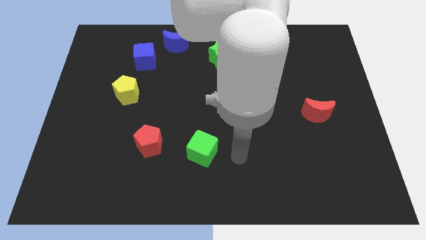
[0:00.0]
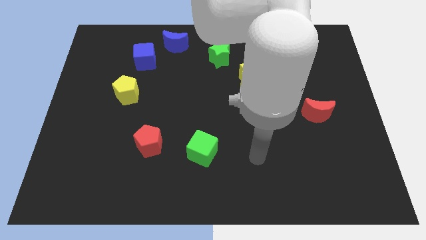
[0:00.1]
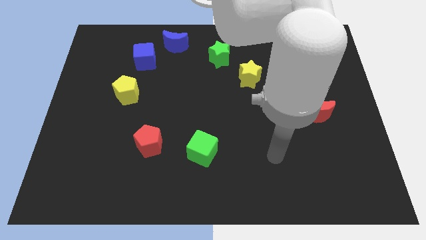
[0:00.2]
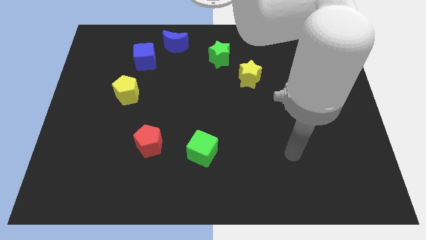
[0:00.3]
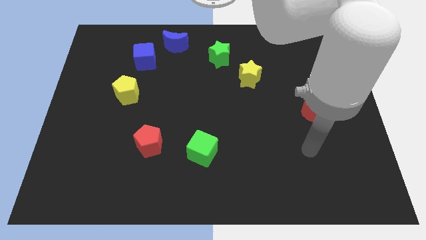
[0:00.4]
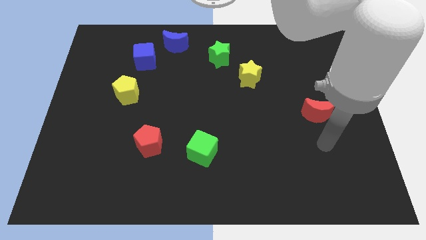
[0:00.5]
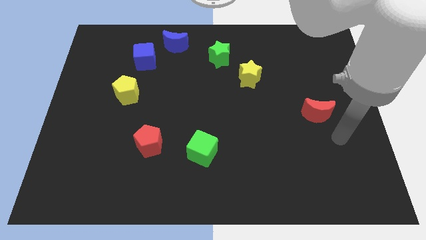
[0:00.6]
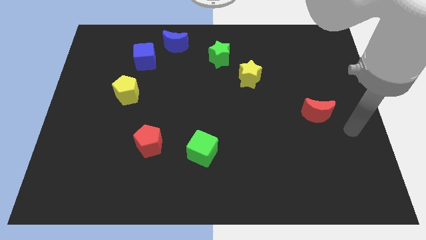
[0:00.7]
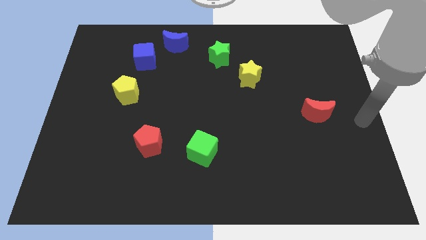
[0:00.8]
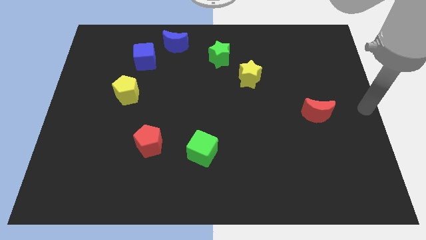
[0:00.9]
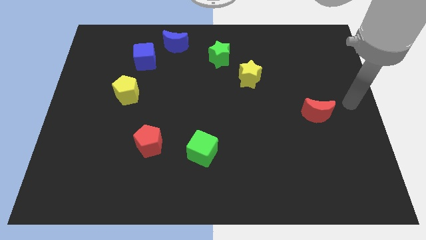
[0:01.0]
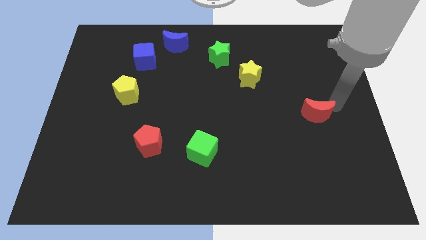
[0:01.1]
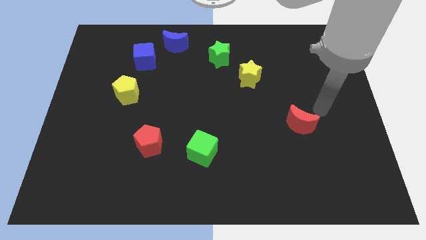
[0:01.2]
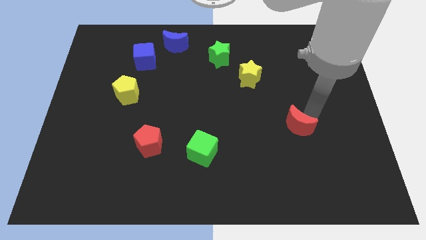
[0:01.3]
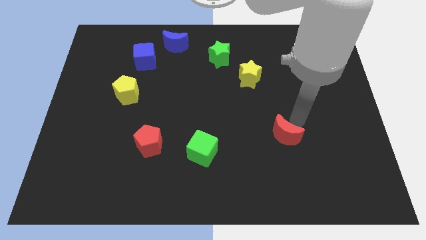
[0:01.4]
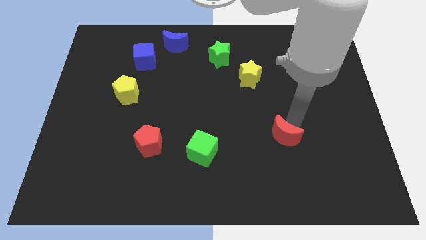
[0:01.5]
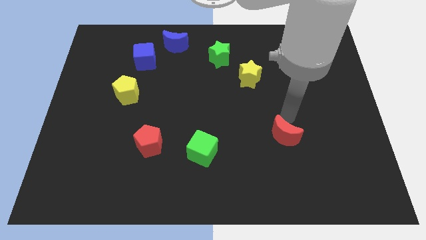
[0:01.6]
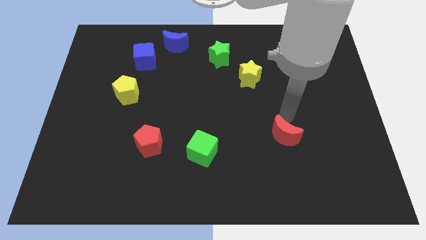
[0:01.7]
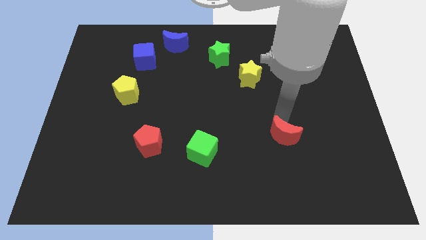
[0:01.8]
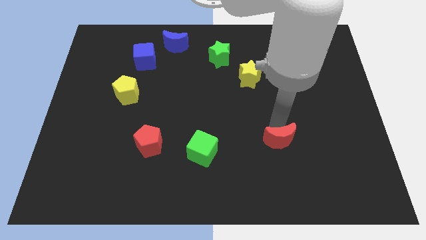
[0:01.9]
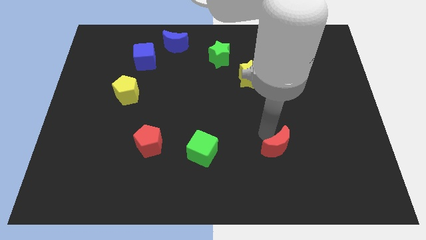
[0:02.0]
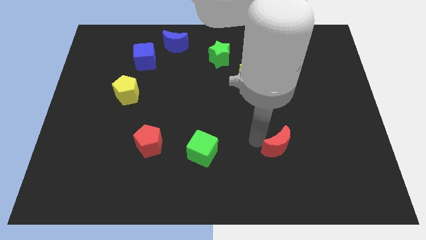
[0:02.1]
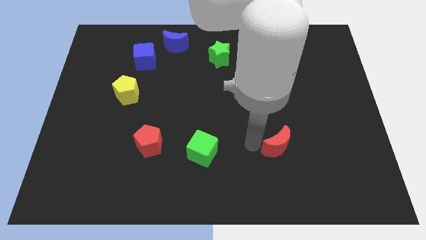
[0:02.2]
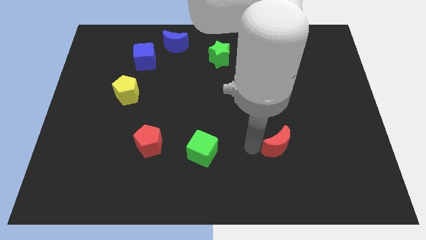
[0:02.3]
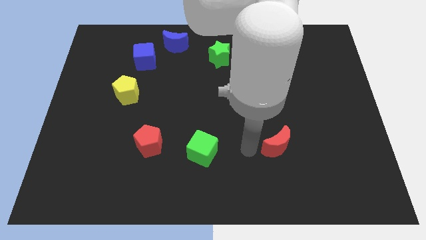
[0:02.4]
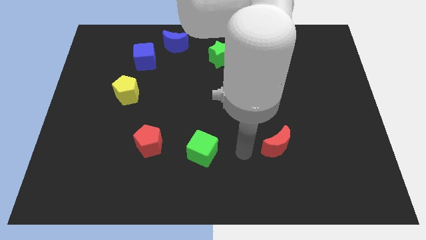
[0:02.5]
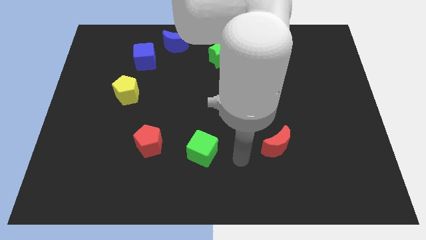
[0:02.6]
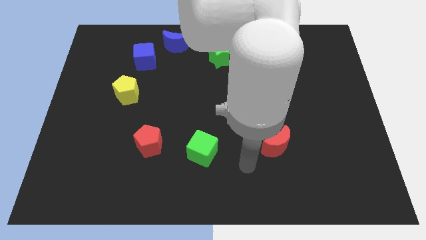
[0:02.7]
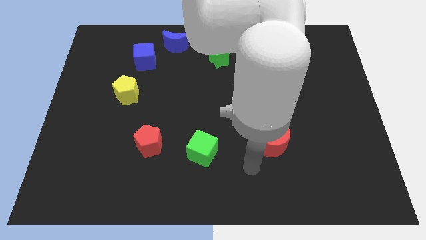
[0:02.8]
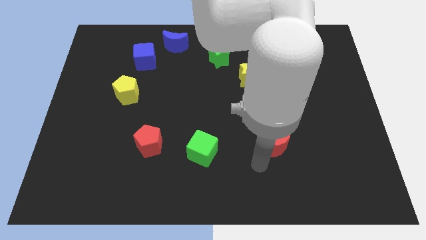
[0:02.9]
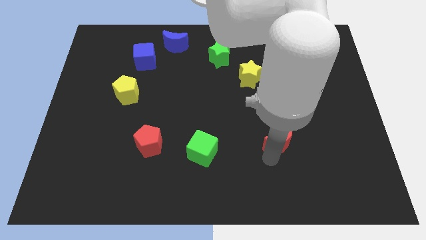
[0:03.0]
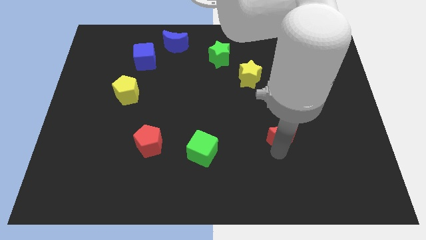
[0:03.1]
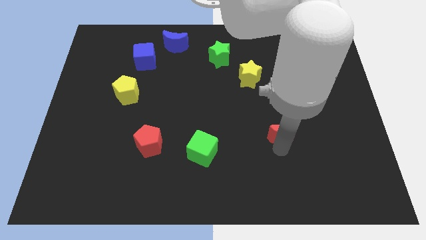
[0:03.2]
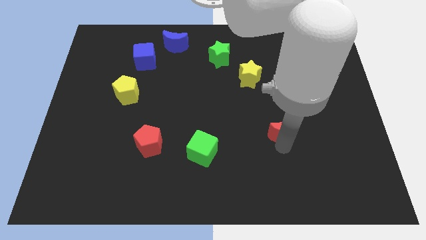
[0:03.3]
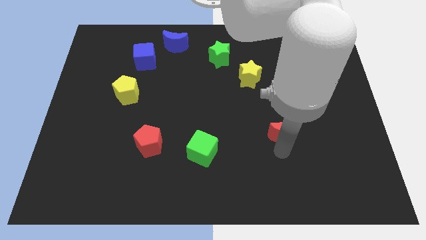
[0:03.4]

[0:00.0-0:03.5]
move the red crescent towards left

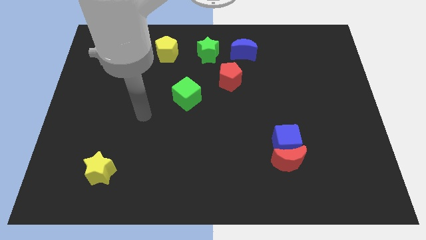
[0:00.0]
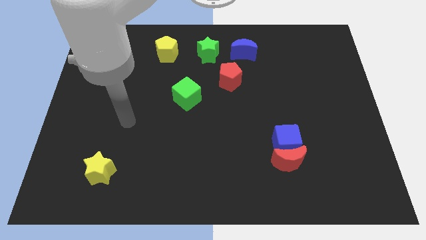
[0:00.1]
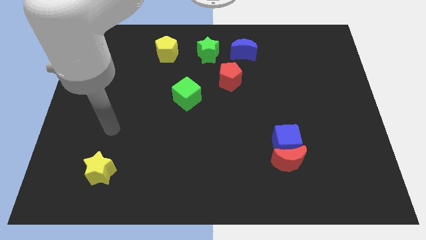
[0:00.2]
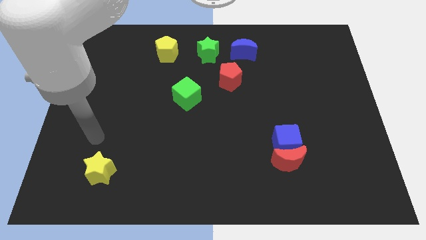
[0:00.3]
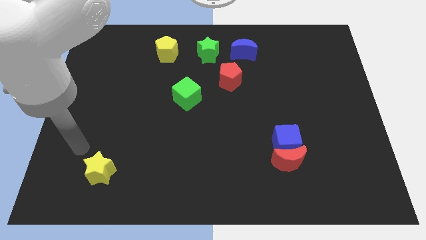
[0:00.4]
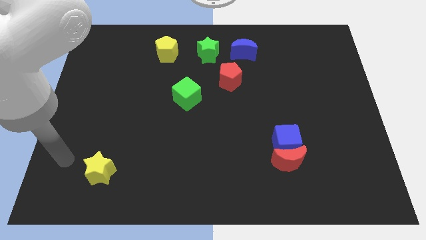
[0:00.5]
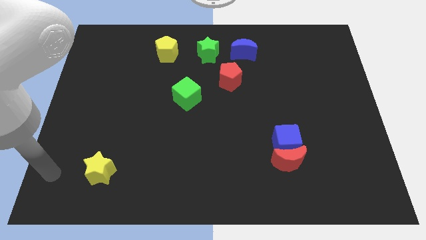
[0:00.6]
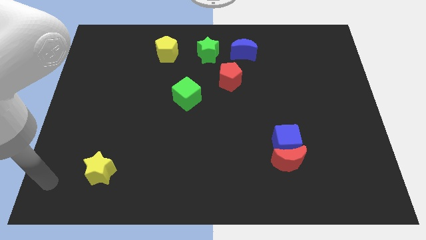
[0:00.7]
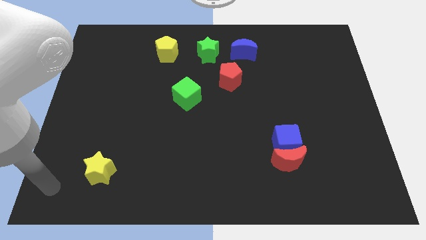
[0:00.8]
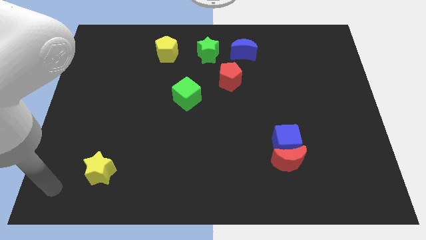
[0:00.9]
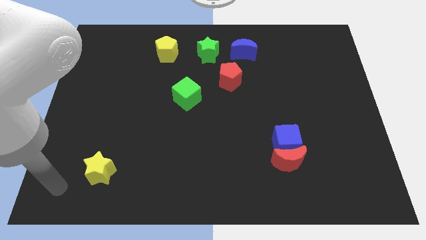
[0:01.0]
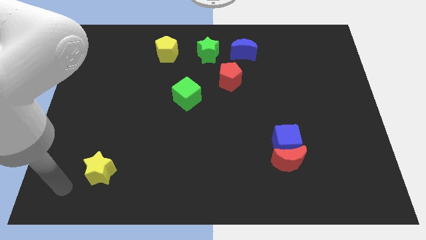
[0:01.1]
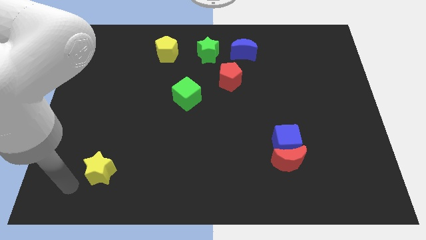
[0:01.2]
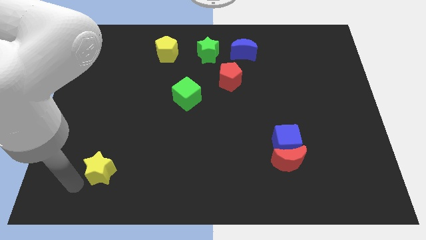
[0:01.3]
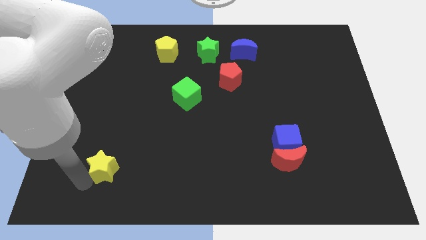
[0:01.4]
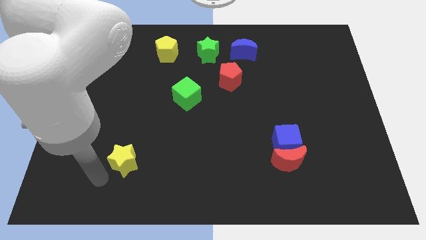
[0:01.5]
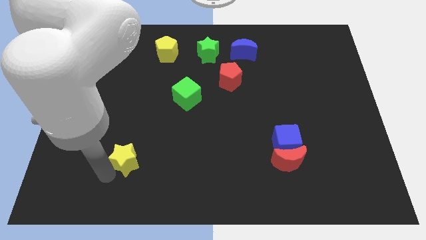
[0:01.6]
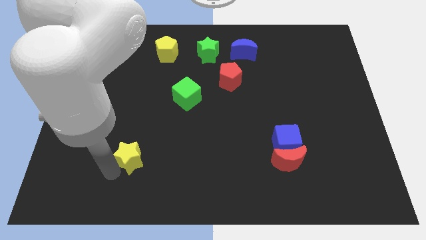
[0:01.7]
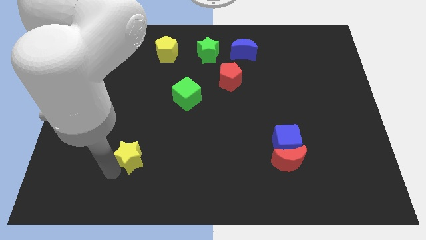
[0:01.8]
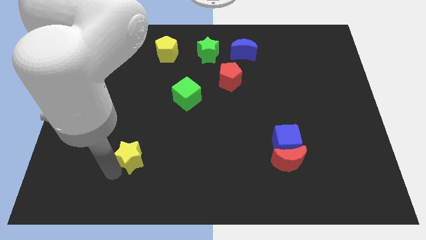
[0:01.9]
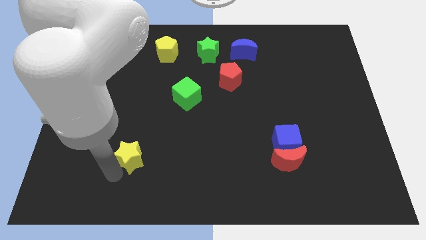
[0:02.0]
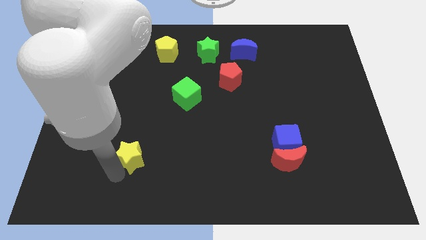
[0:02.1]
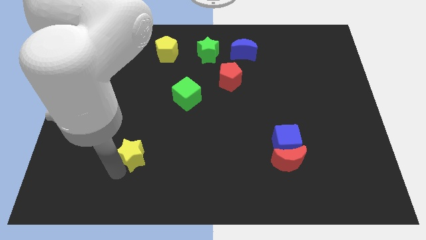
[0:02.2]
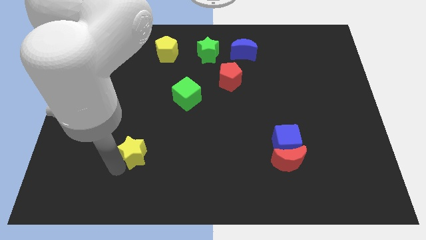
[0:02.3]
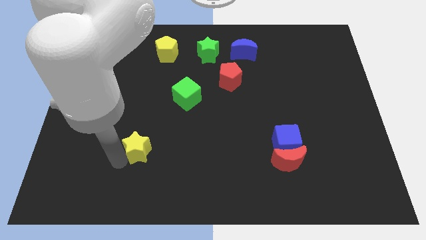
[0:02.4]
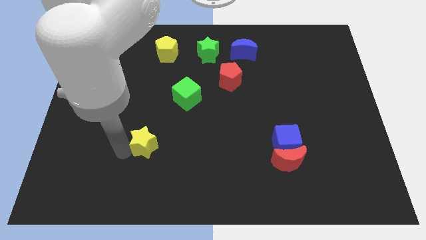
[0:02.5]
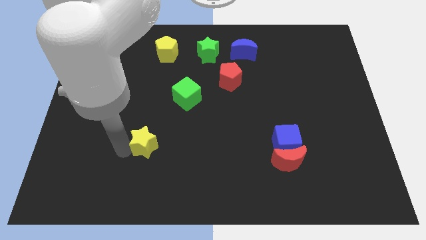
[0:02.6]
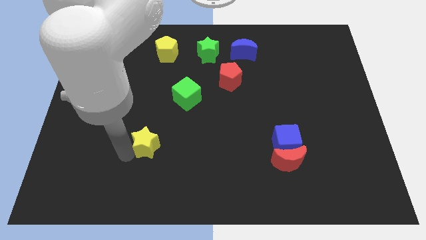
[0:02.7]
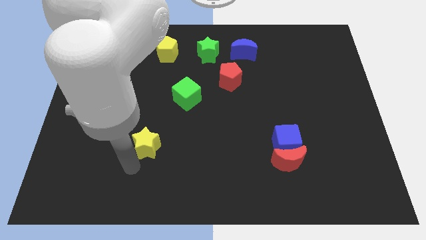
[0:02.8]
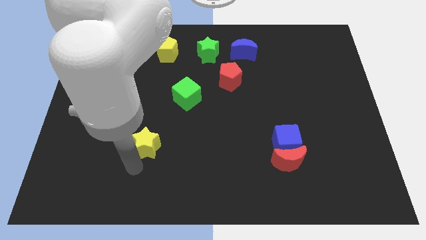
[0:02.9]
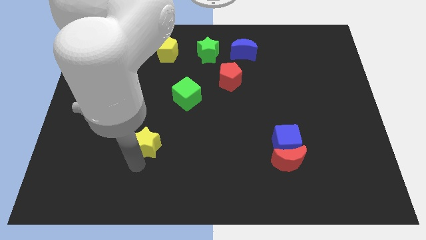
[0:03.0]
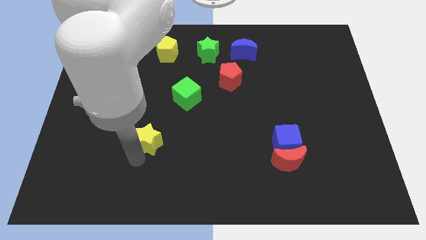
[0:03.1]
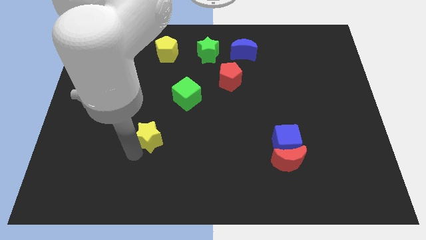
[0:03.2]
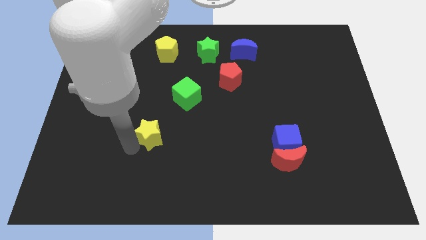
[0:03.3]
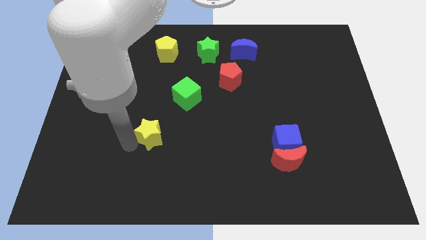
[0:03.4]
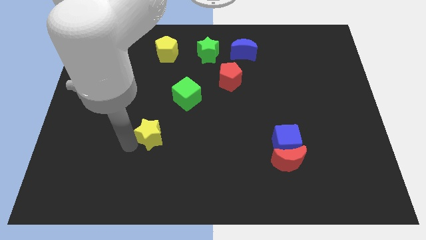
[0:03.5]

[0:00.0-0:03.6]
move the yellow star towards green cube

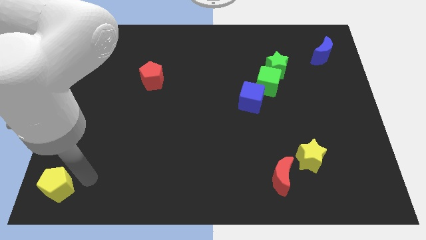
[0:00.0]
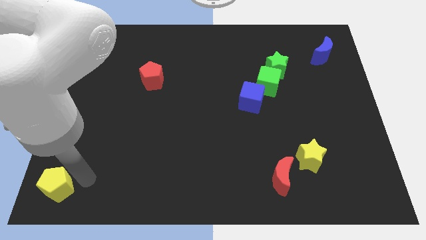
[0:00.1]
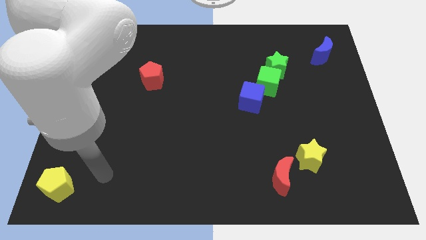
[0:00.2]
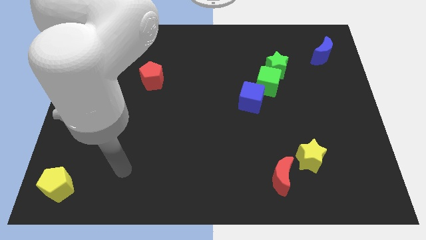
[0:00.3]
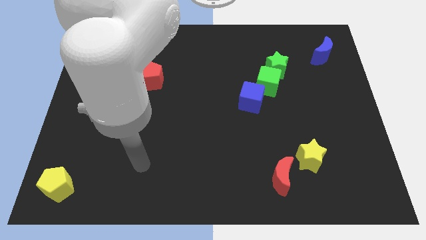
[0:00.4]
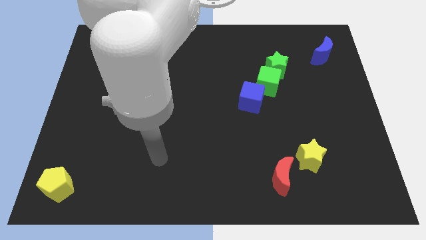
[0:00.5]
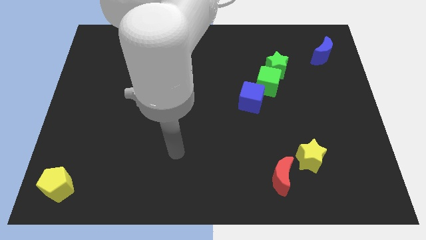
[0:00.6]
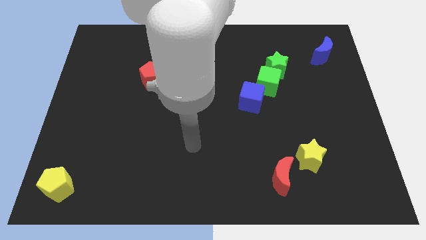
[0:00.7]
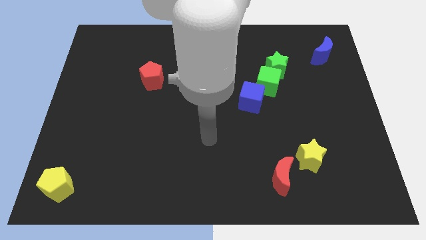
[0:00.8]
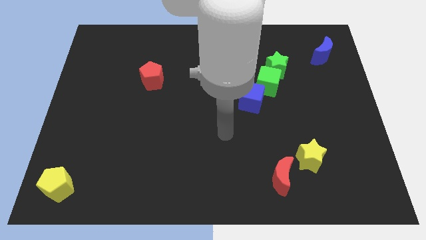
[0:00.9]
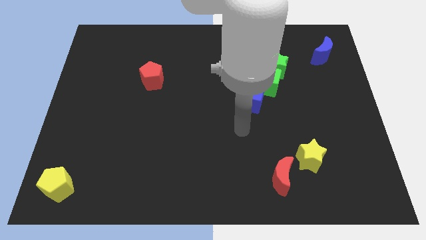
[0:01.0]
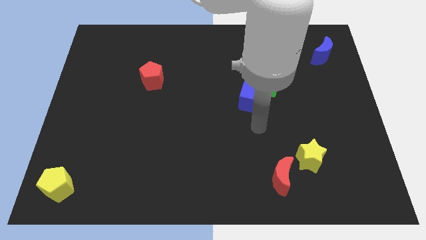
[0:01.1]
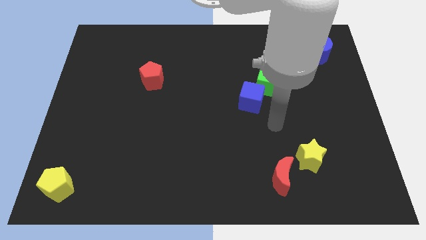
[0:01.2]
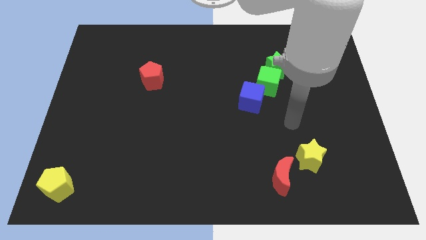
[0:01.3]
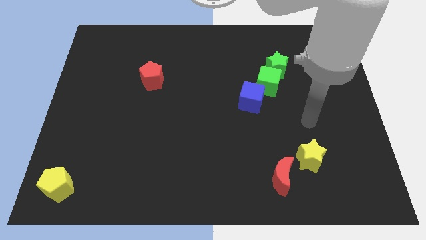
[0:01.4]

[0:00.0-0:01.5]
go to the top side of the yellow star

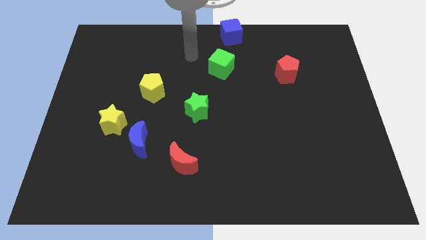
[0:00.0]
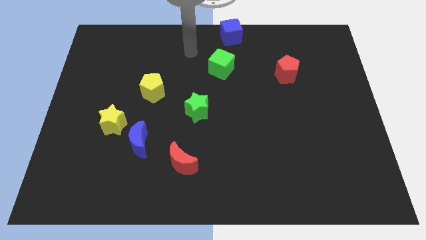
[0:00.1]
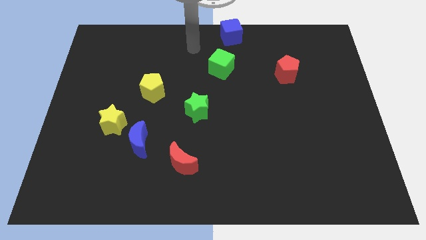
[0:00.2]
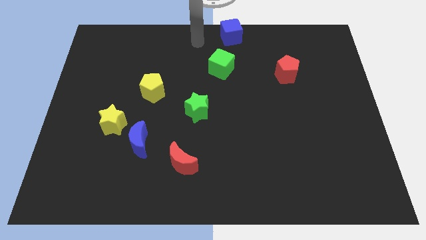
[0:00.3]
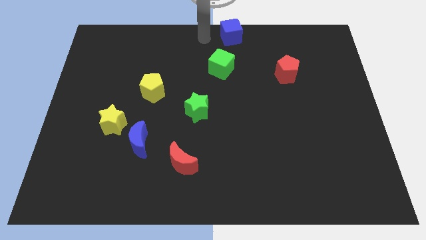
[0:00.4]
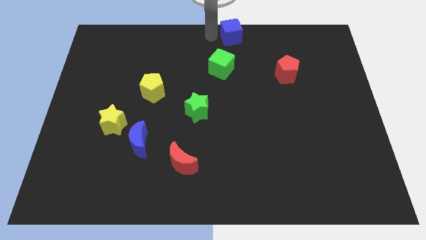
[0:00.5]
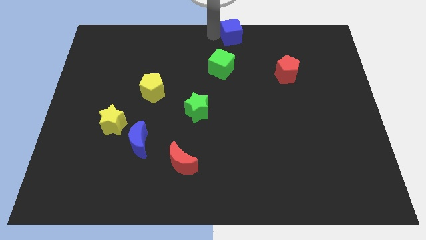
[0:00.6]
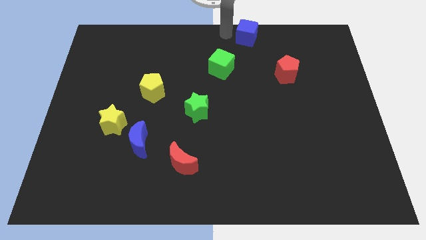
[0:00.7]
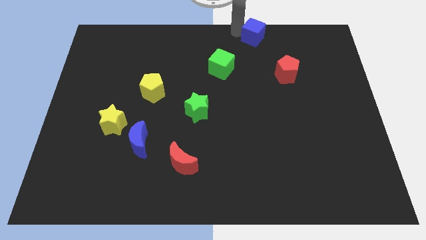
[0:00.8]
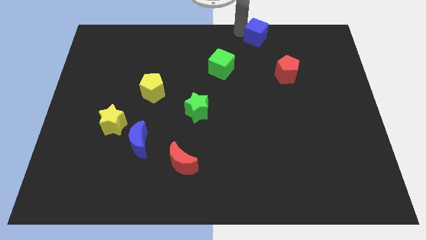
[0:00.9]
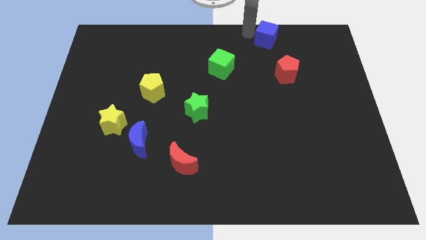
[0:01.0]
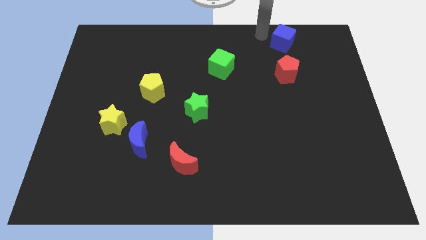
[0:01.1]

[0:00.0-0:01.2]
put the blue cube to the top side of the red pentagon
